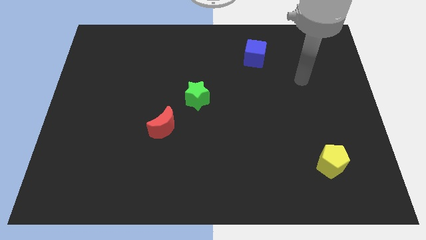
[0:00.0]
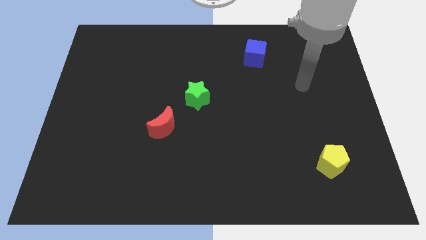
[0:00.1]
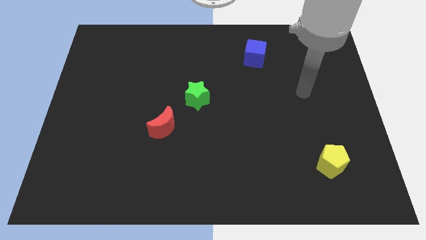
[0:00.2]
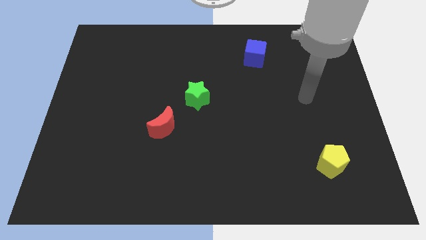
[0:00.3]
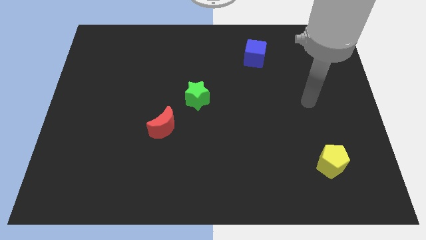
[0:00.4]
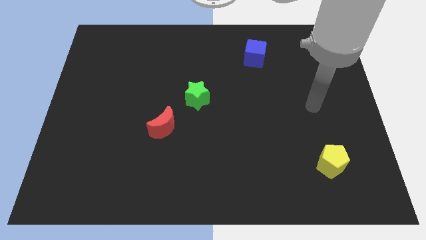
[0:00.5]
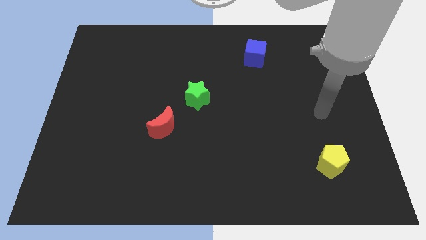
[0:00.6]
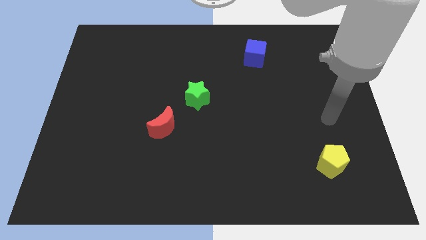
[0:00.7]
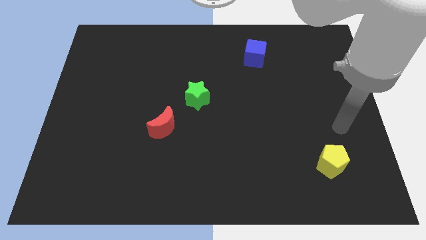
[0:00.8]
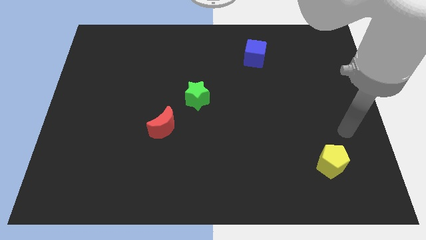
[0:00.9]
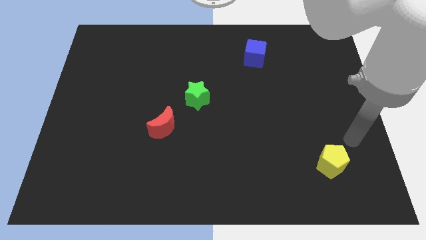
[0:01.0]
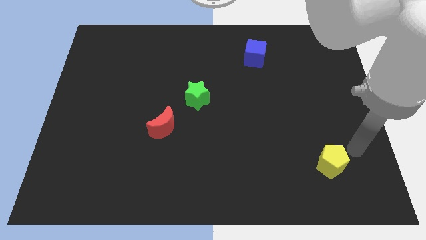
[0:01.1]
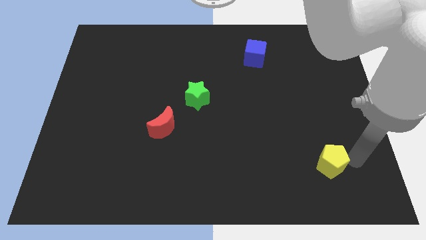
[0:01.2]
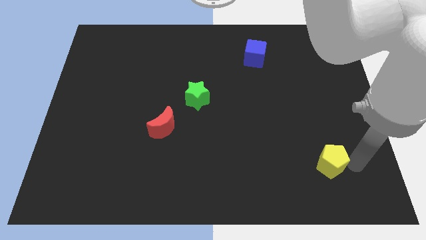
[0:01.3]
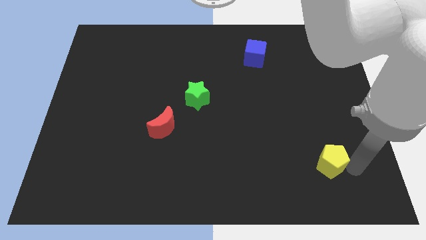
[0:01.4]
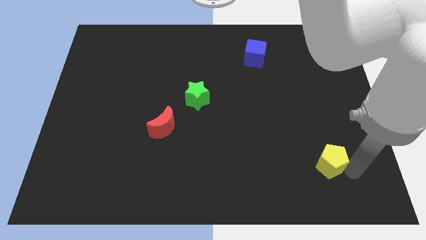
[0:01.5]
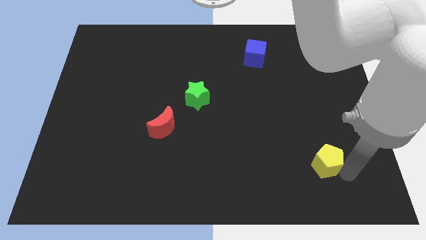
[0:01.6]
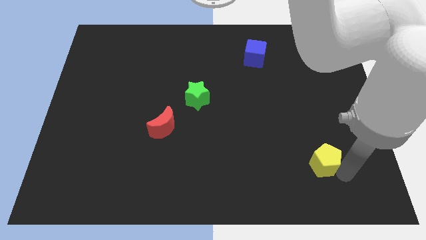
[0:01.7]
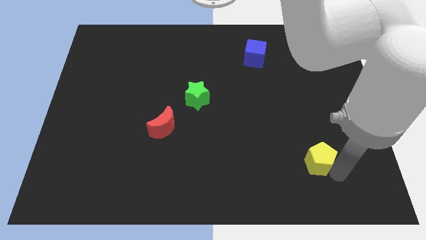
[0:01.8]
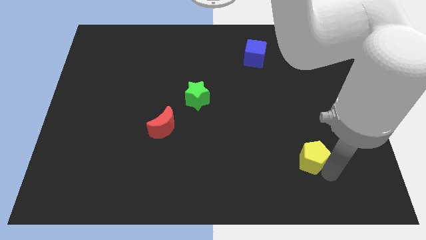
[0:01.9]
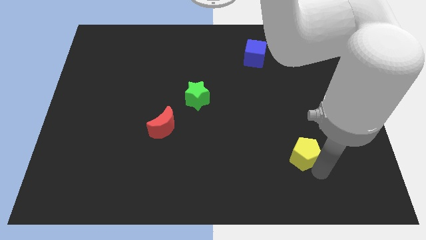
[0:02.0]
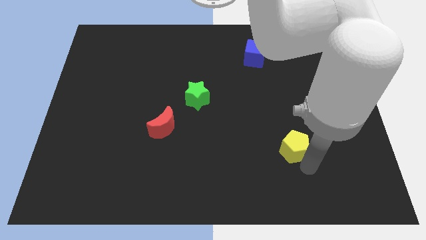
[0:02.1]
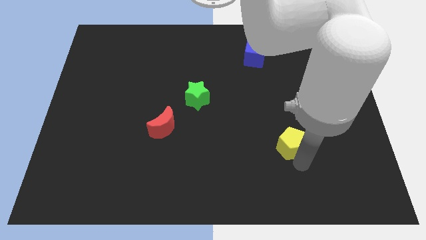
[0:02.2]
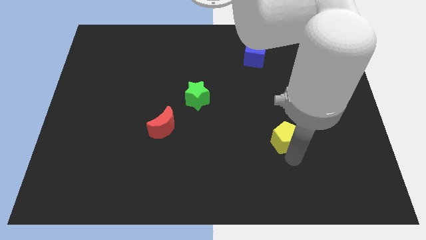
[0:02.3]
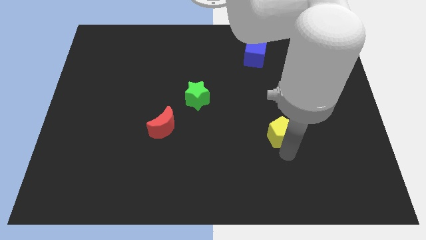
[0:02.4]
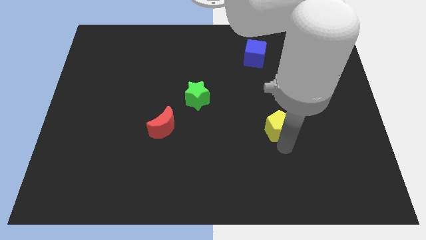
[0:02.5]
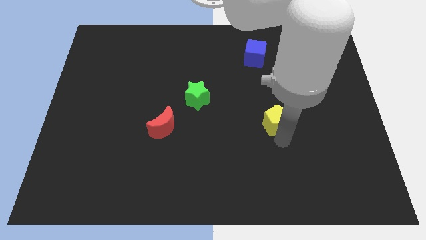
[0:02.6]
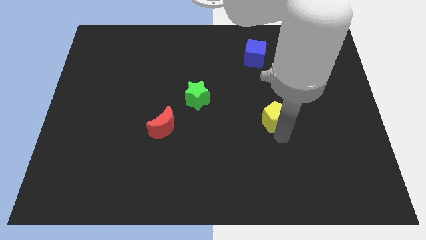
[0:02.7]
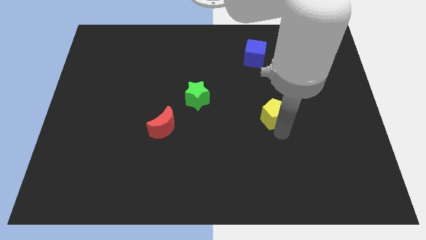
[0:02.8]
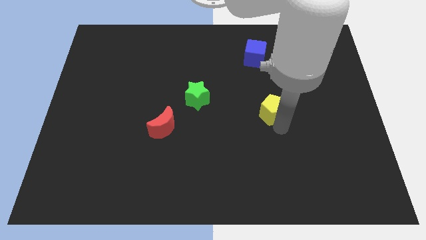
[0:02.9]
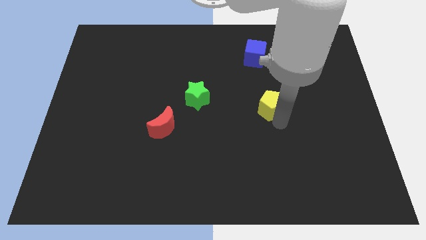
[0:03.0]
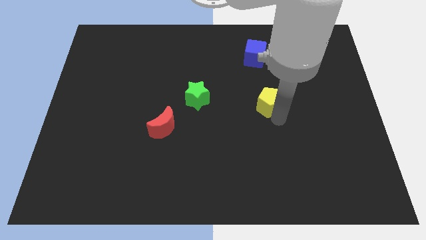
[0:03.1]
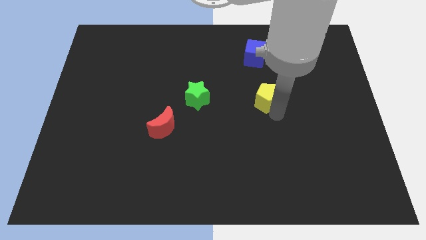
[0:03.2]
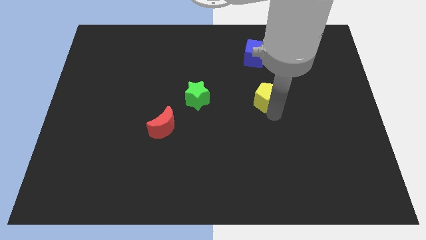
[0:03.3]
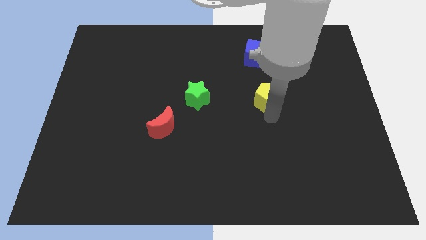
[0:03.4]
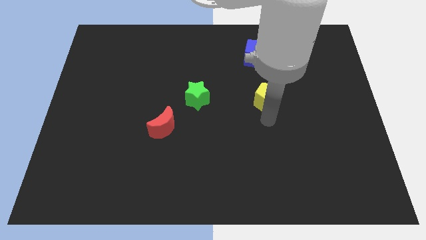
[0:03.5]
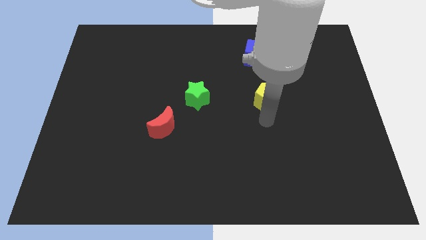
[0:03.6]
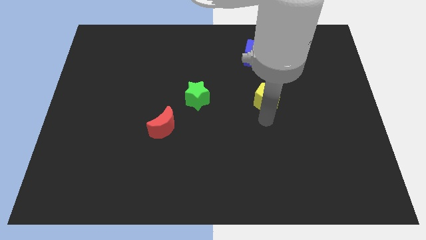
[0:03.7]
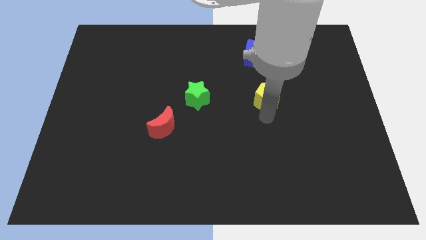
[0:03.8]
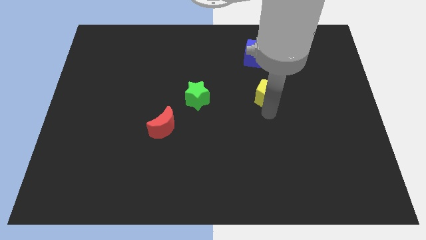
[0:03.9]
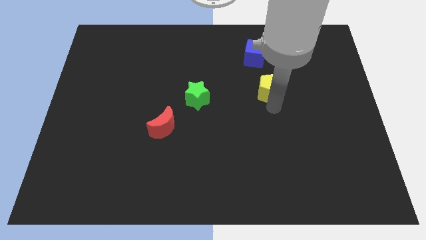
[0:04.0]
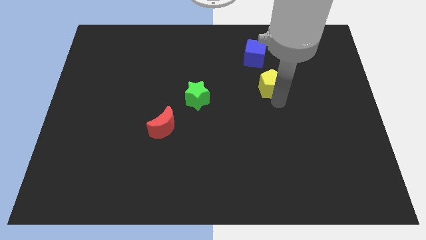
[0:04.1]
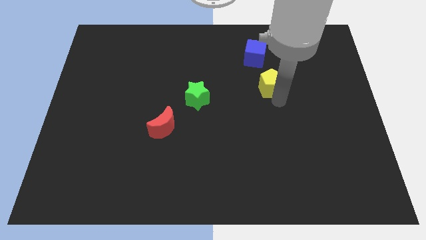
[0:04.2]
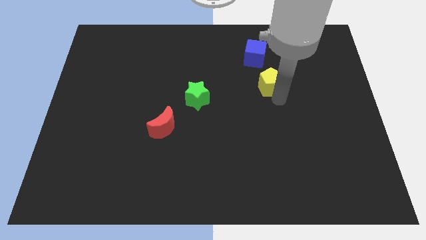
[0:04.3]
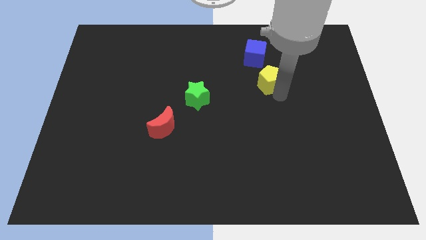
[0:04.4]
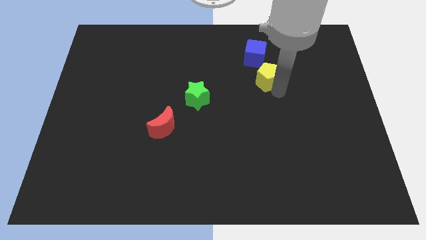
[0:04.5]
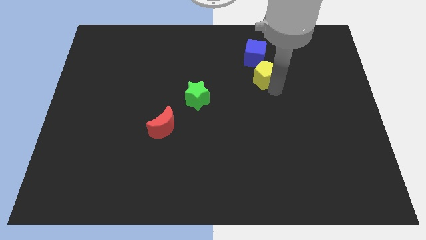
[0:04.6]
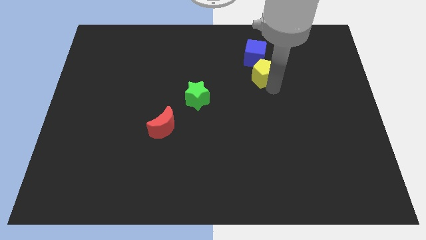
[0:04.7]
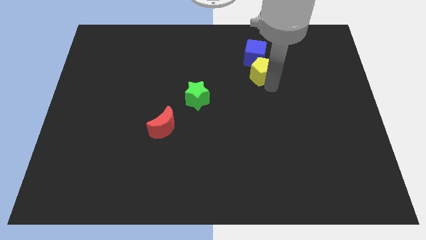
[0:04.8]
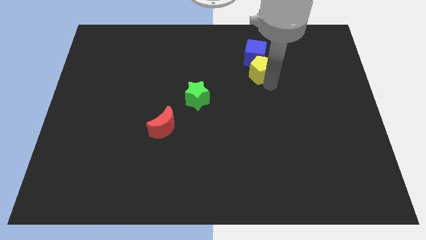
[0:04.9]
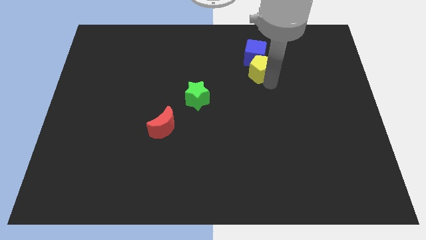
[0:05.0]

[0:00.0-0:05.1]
move the pentagon towards the cube

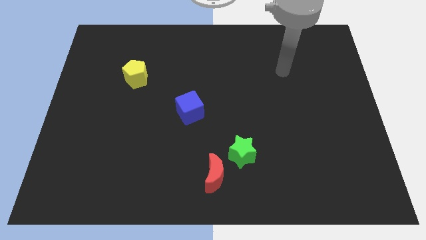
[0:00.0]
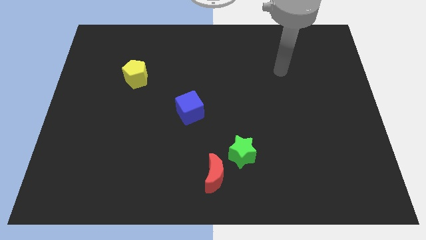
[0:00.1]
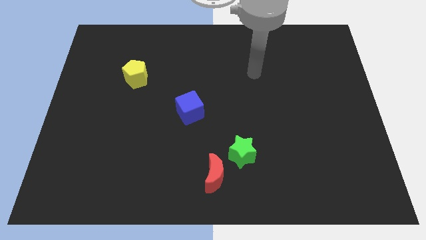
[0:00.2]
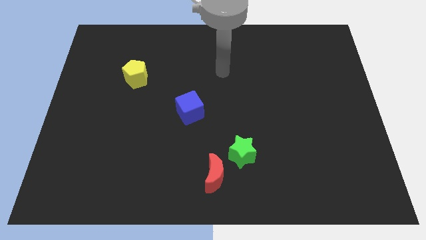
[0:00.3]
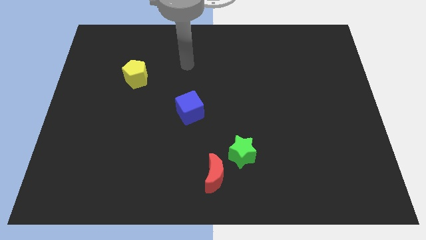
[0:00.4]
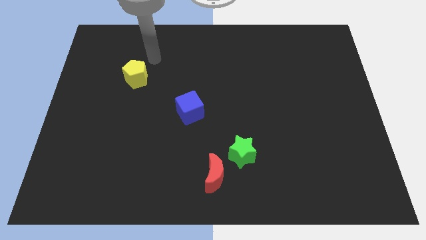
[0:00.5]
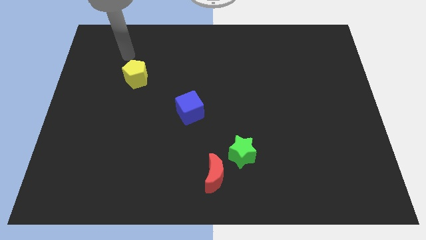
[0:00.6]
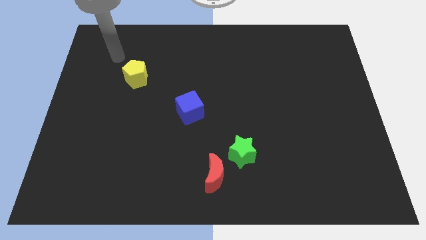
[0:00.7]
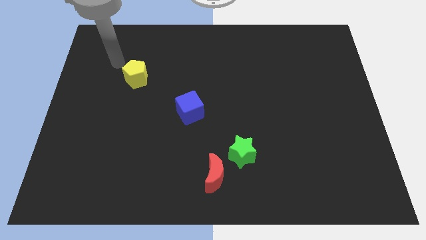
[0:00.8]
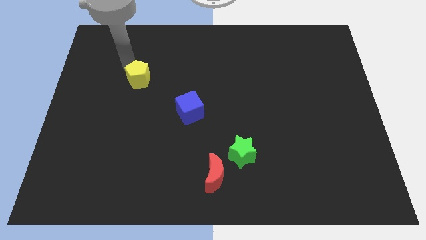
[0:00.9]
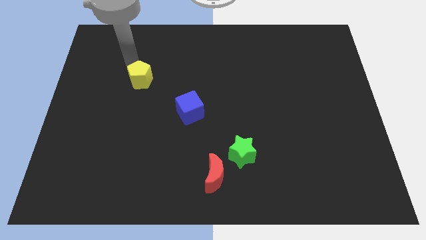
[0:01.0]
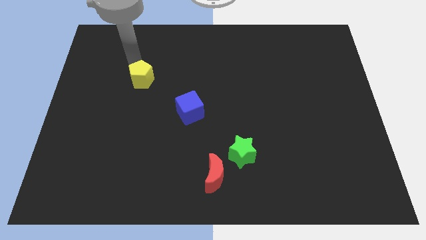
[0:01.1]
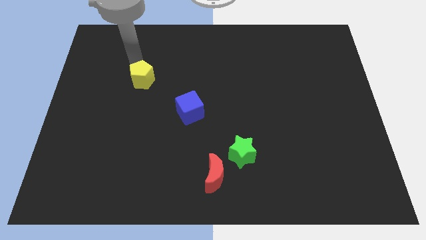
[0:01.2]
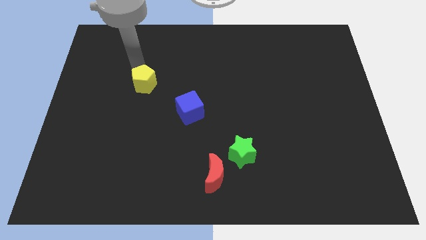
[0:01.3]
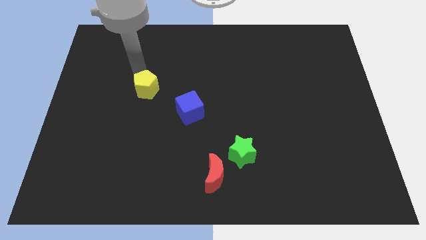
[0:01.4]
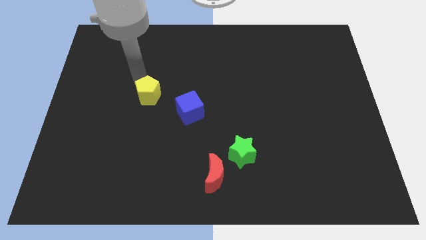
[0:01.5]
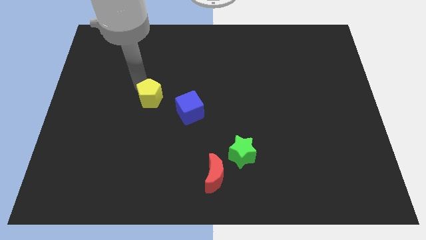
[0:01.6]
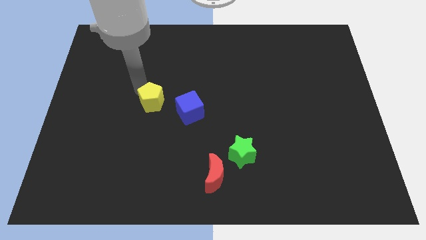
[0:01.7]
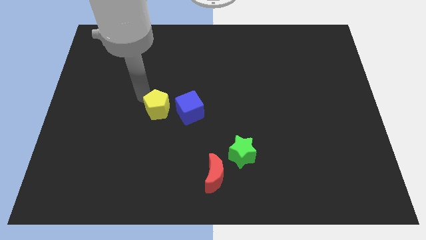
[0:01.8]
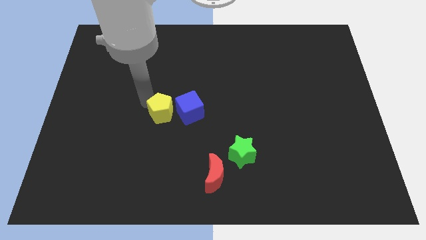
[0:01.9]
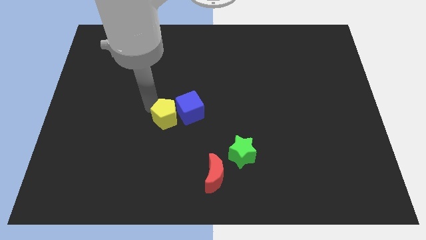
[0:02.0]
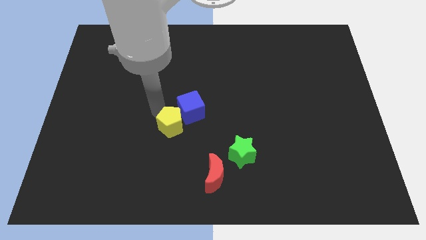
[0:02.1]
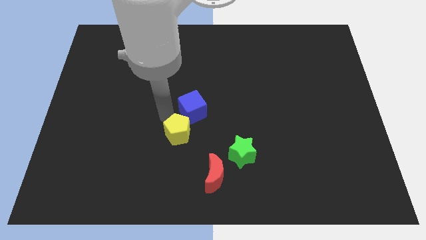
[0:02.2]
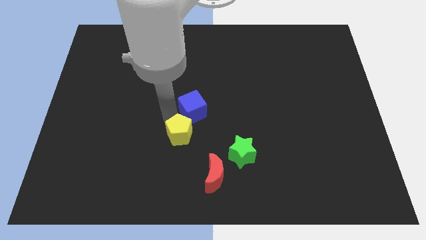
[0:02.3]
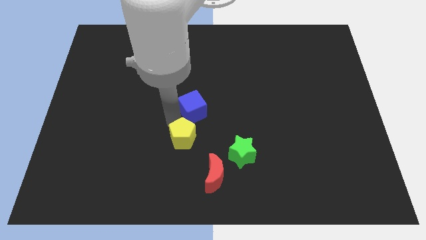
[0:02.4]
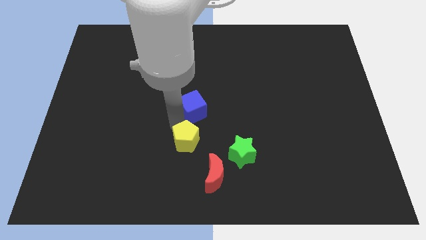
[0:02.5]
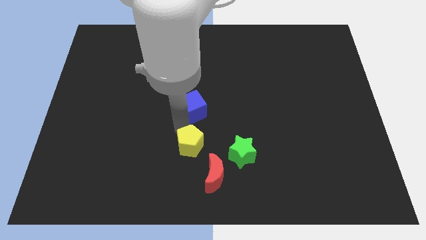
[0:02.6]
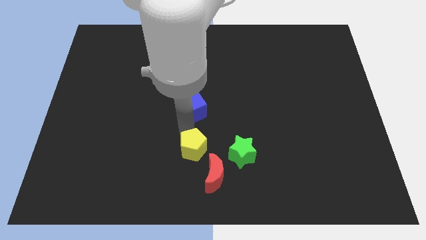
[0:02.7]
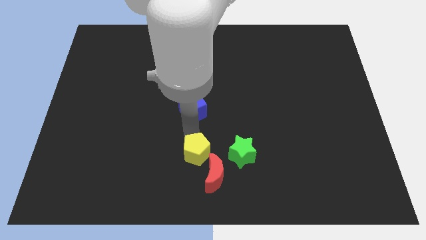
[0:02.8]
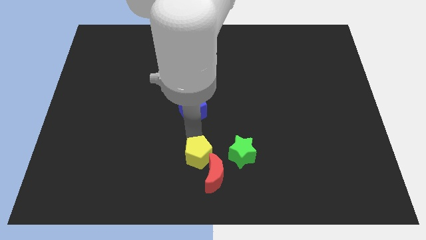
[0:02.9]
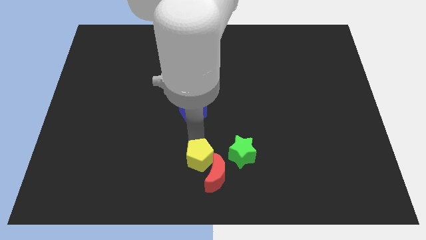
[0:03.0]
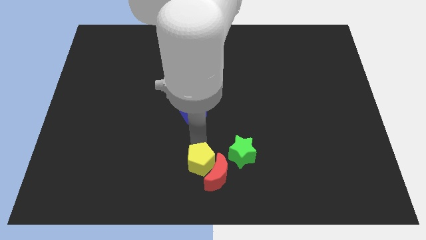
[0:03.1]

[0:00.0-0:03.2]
put the yellow block close to the moon

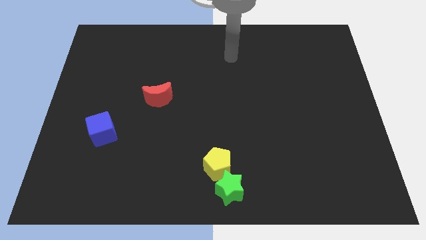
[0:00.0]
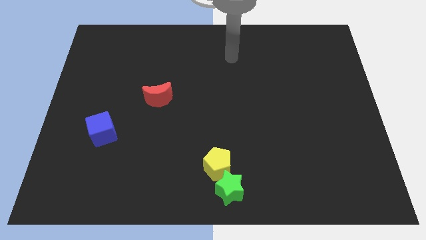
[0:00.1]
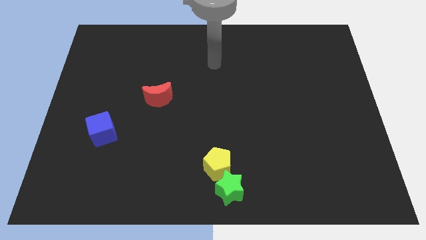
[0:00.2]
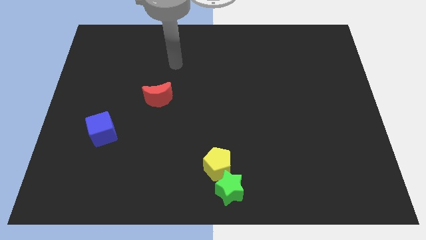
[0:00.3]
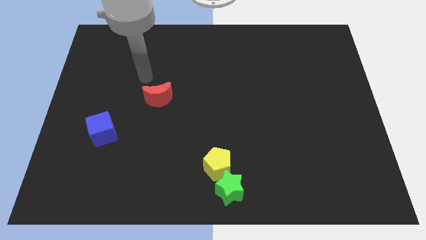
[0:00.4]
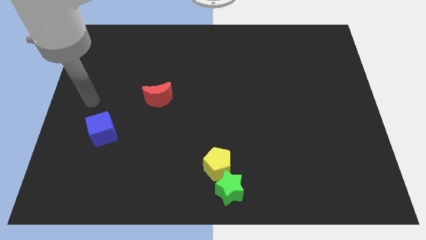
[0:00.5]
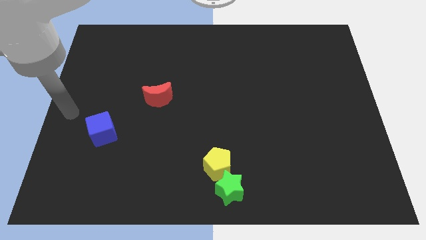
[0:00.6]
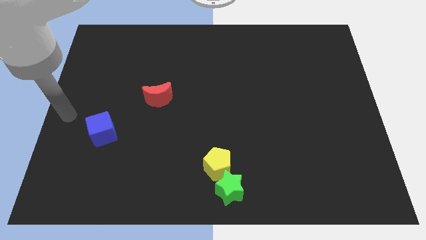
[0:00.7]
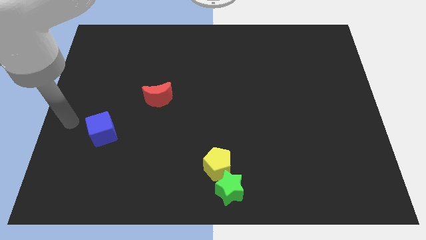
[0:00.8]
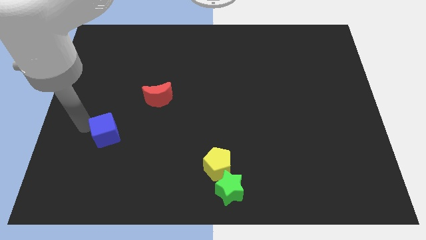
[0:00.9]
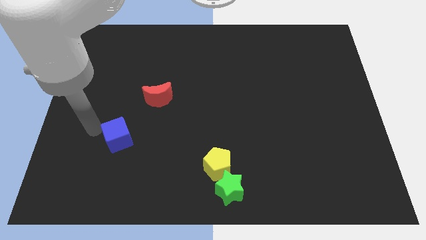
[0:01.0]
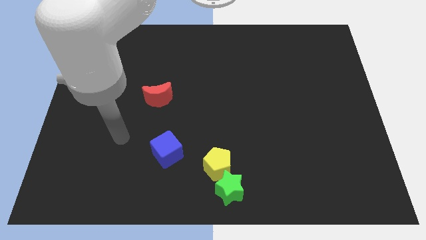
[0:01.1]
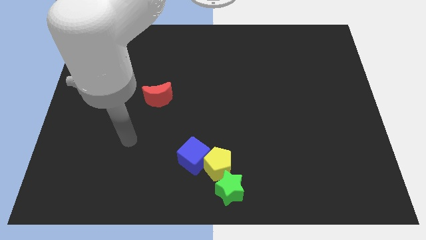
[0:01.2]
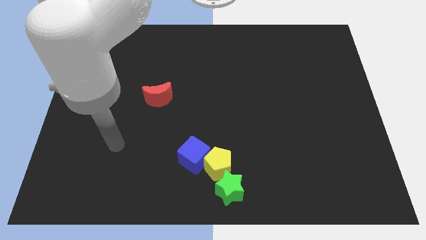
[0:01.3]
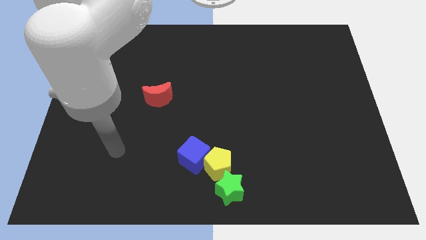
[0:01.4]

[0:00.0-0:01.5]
push the cube towards the pentagon
